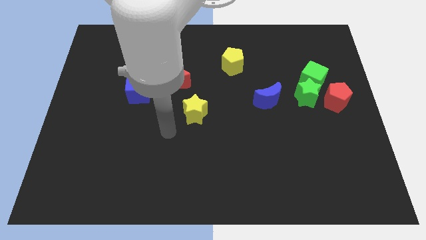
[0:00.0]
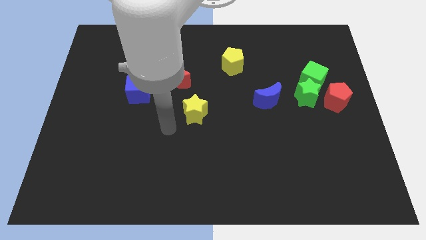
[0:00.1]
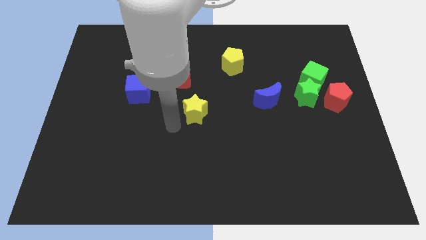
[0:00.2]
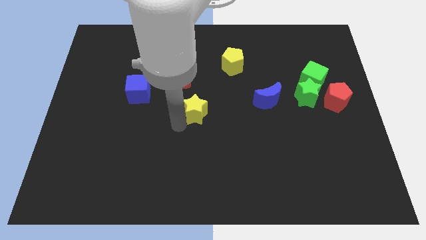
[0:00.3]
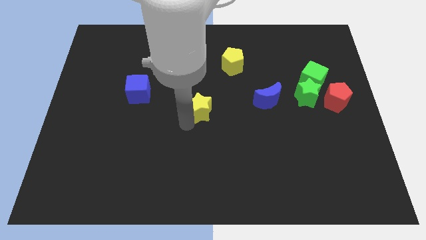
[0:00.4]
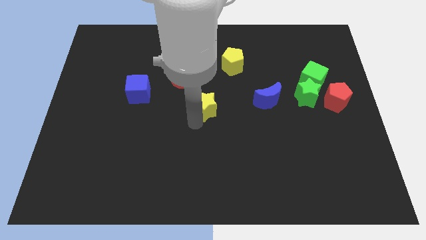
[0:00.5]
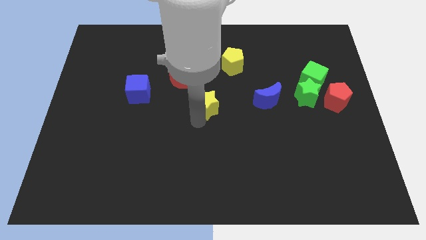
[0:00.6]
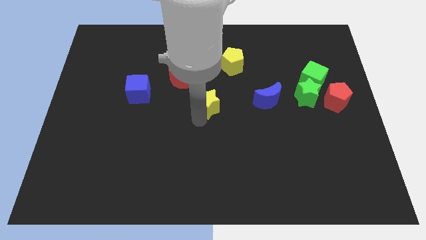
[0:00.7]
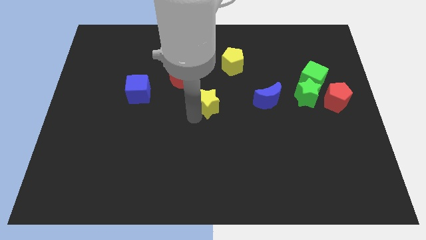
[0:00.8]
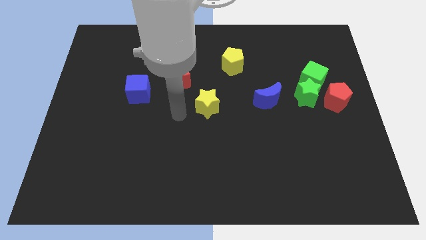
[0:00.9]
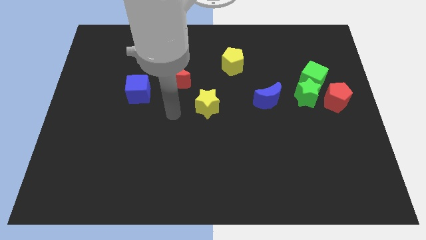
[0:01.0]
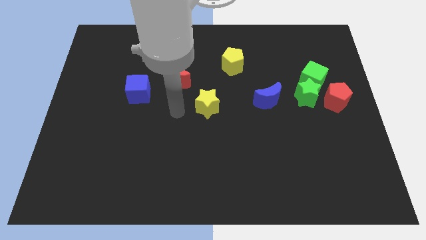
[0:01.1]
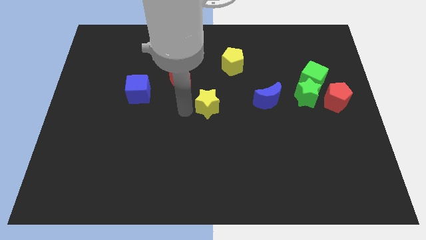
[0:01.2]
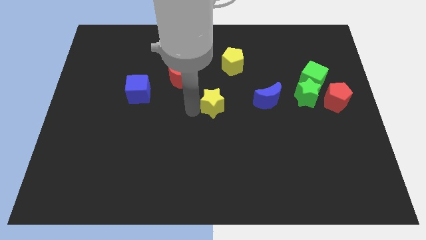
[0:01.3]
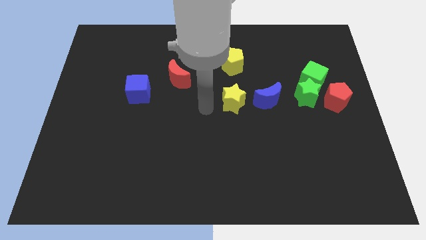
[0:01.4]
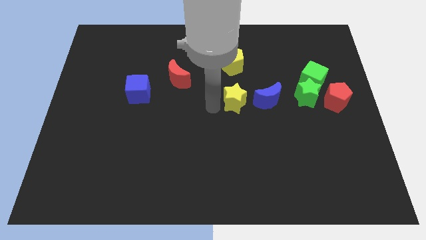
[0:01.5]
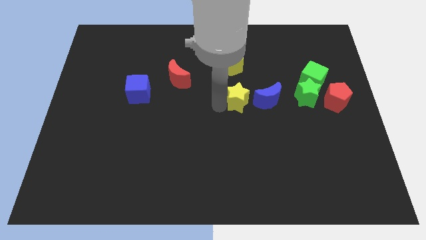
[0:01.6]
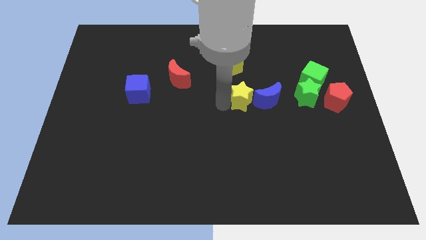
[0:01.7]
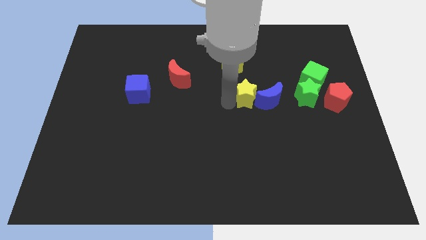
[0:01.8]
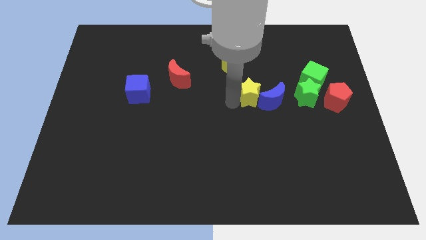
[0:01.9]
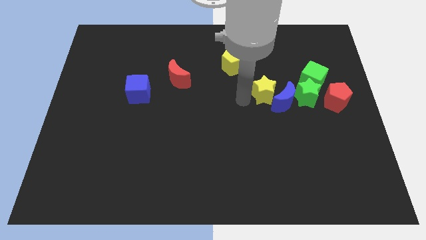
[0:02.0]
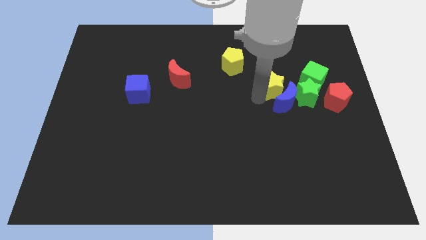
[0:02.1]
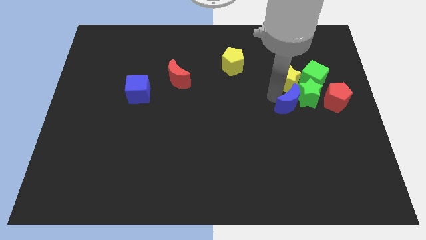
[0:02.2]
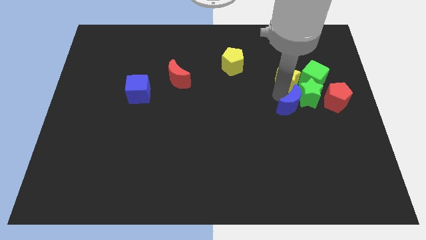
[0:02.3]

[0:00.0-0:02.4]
push blue crescent and yellow star towards the green blocks

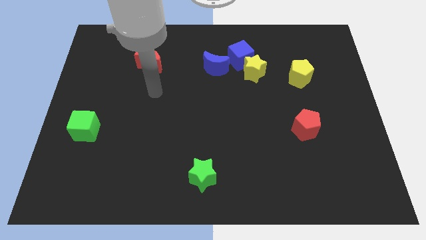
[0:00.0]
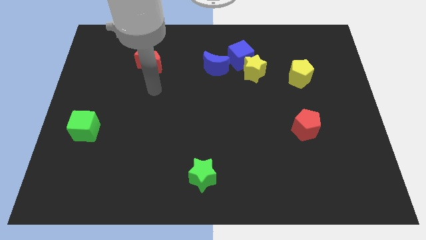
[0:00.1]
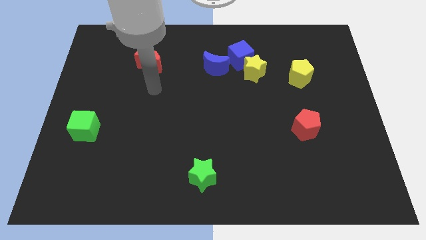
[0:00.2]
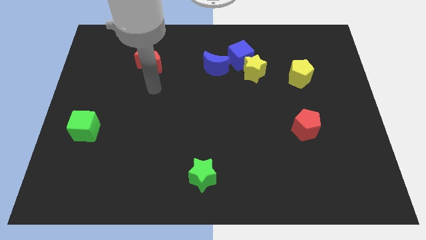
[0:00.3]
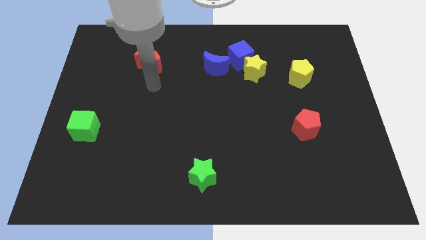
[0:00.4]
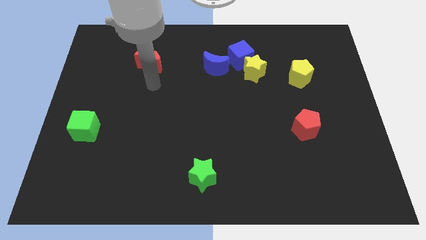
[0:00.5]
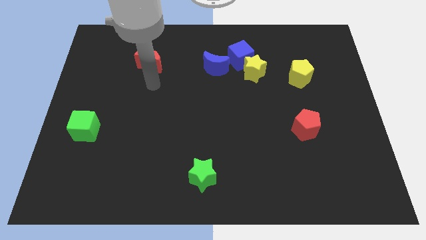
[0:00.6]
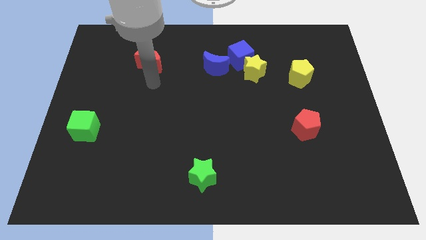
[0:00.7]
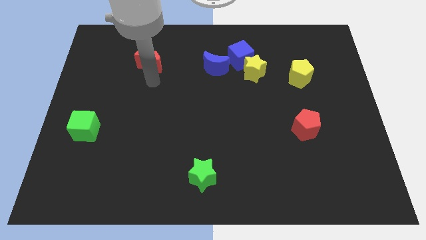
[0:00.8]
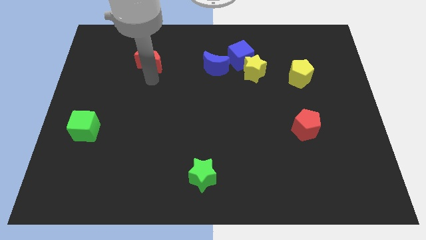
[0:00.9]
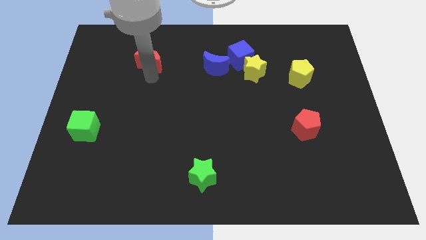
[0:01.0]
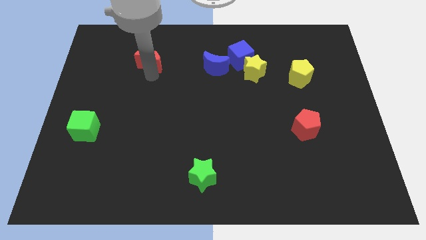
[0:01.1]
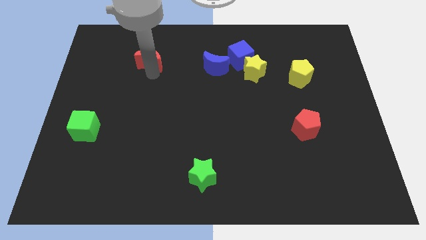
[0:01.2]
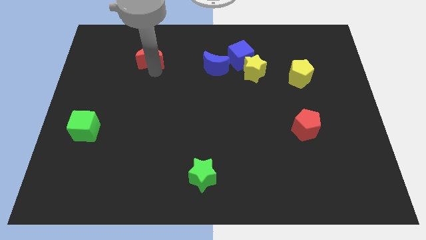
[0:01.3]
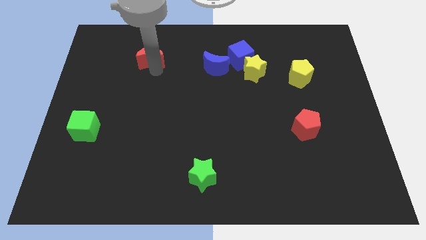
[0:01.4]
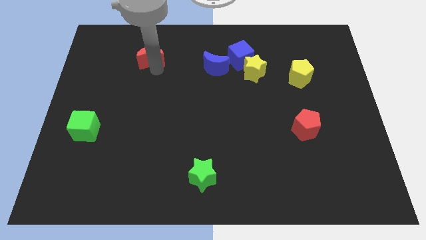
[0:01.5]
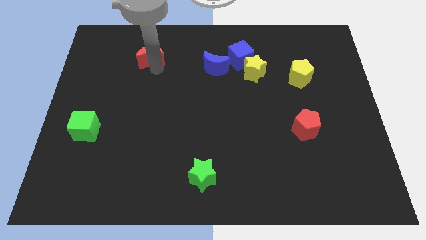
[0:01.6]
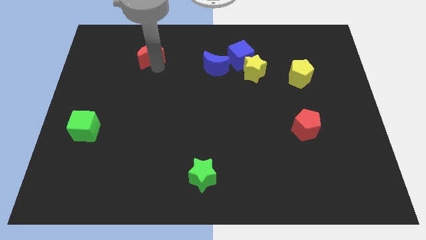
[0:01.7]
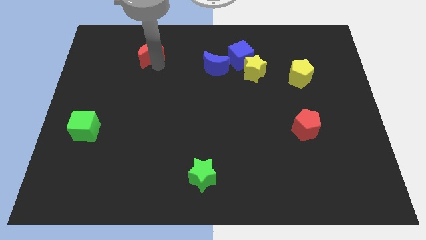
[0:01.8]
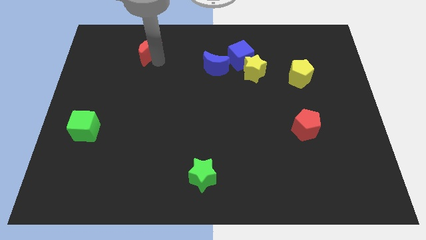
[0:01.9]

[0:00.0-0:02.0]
push the red moon slightly towards upward

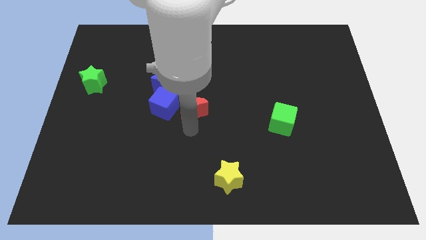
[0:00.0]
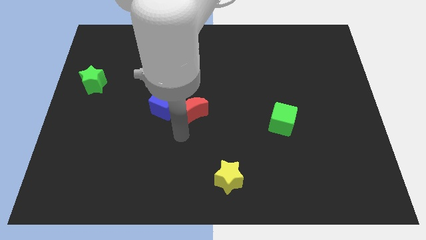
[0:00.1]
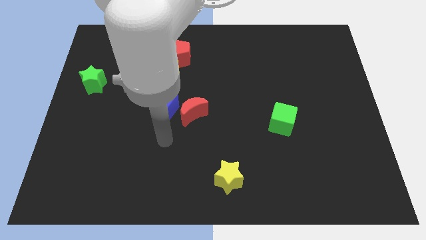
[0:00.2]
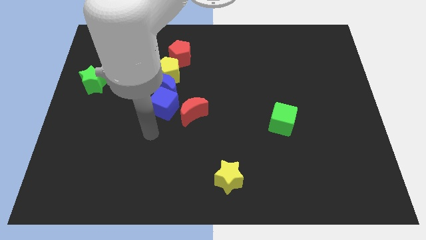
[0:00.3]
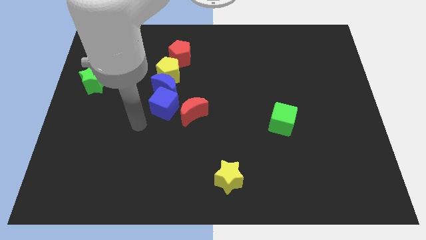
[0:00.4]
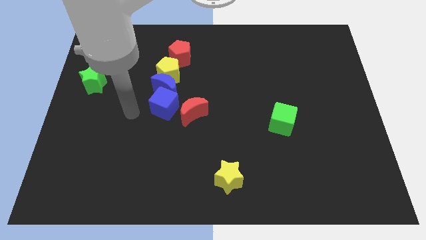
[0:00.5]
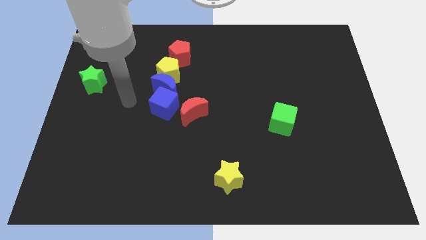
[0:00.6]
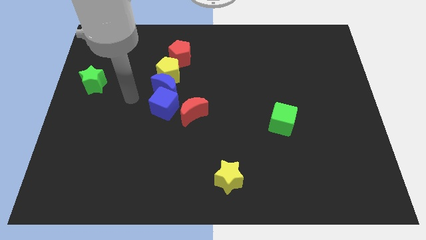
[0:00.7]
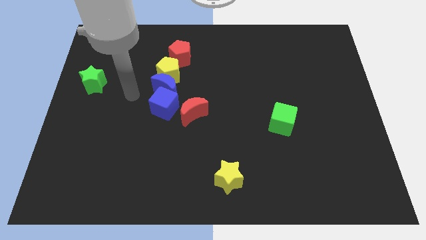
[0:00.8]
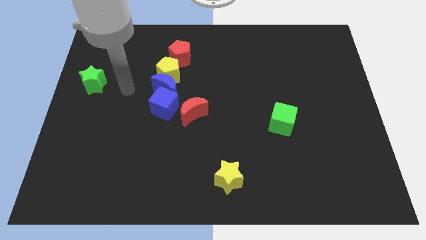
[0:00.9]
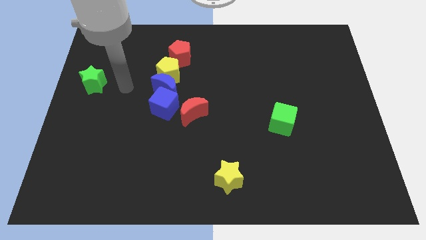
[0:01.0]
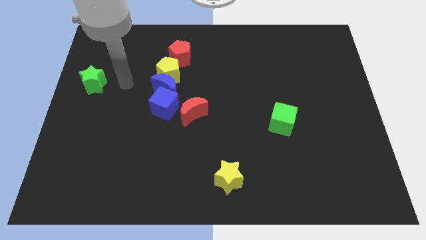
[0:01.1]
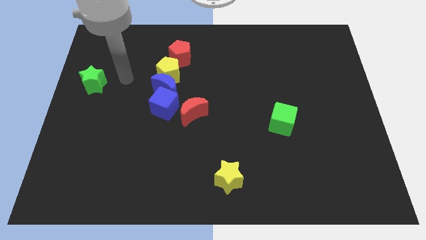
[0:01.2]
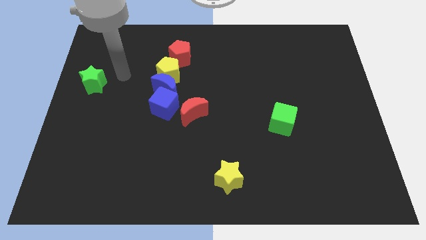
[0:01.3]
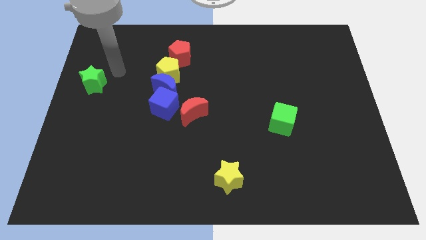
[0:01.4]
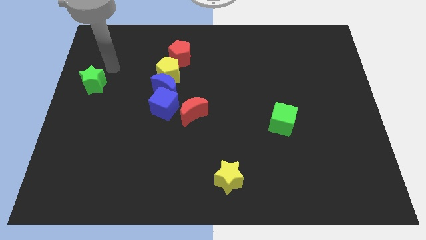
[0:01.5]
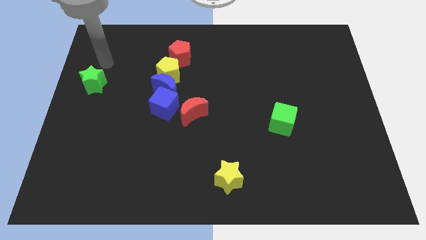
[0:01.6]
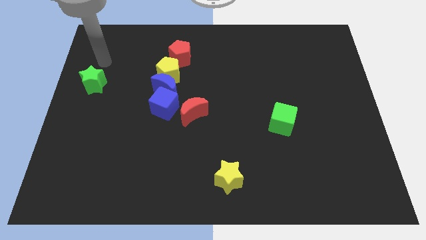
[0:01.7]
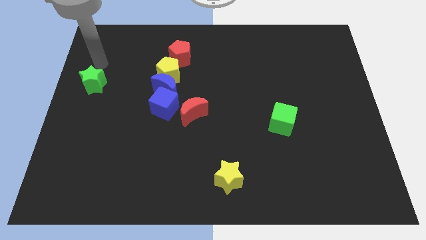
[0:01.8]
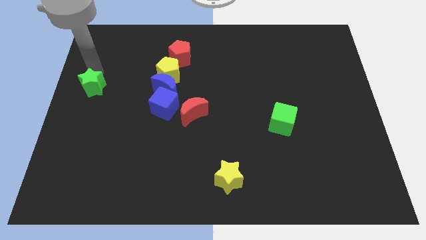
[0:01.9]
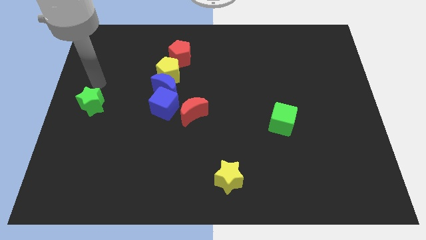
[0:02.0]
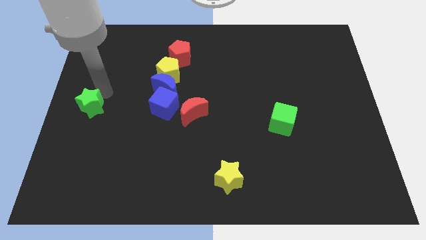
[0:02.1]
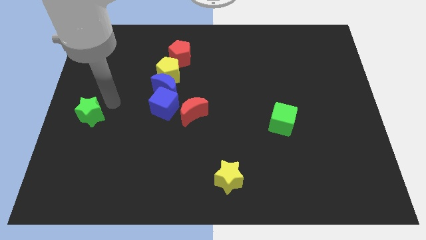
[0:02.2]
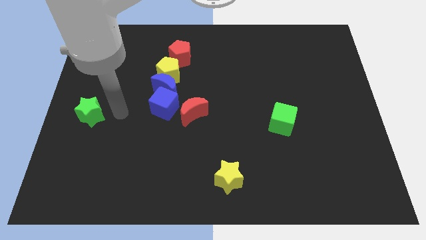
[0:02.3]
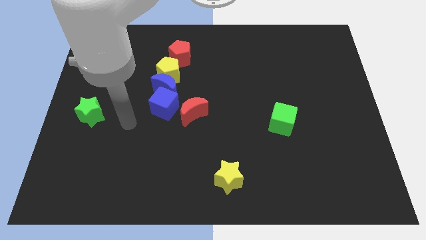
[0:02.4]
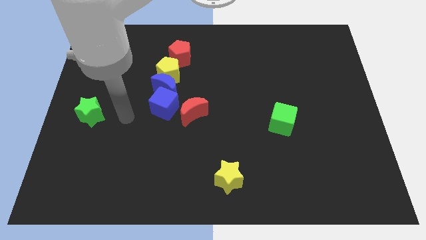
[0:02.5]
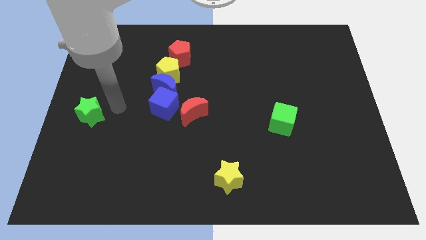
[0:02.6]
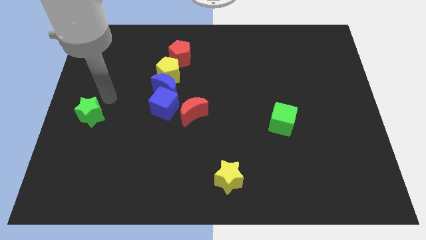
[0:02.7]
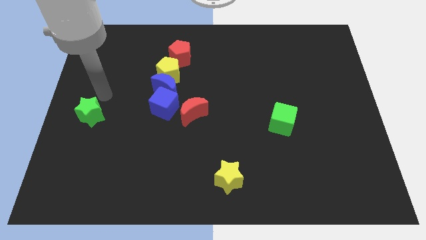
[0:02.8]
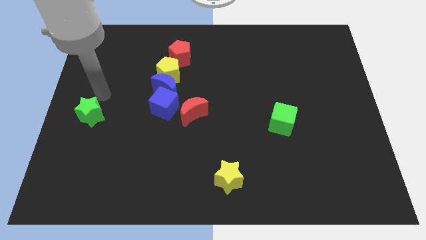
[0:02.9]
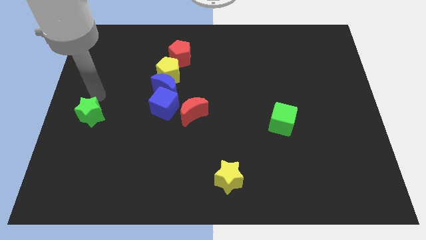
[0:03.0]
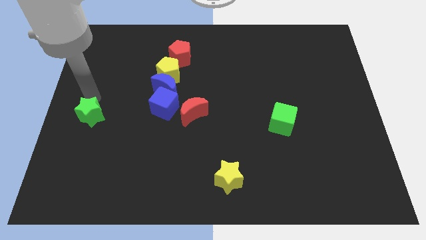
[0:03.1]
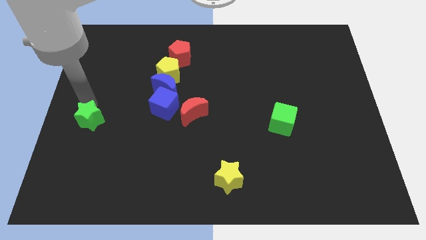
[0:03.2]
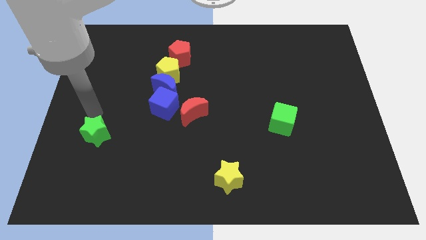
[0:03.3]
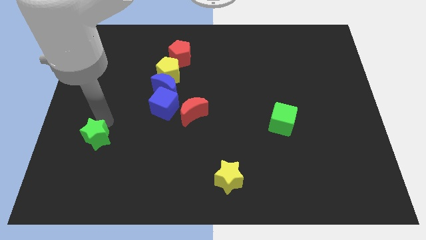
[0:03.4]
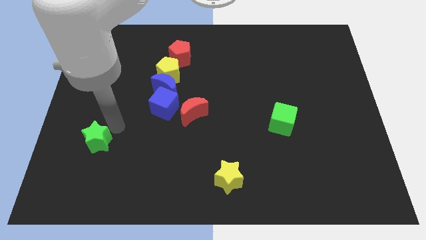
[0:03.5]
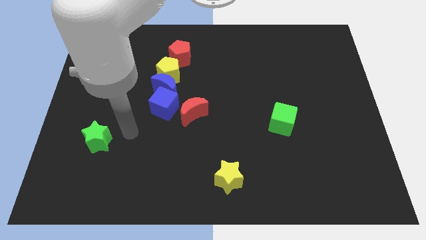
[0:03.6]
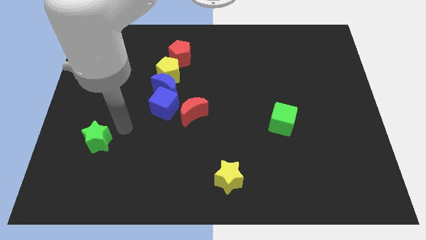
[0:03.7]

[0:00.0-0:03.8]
push the green star downwards

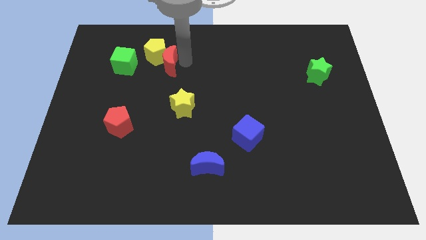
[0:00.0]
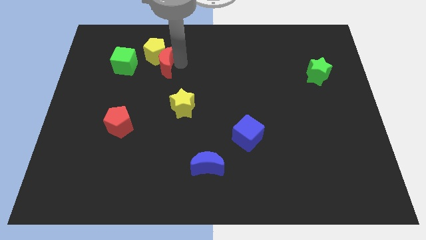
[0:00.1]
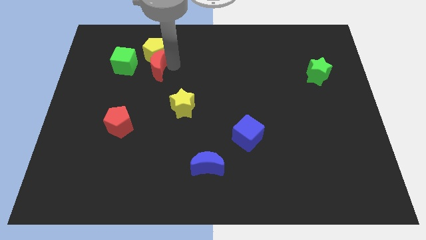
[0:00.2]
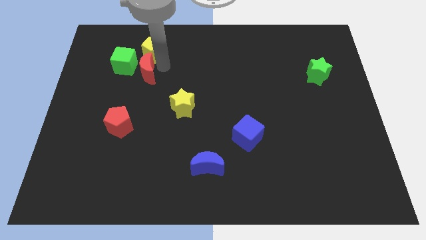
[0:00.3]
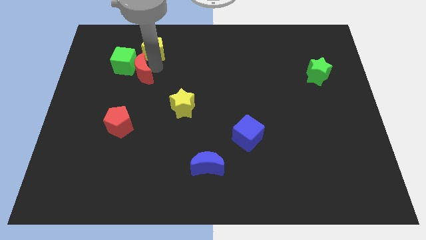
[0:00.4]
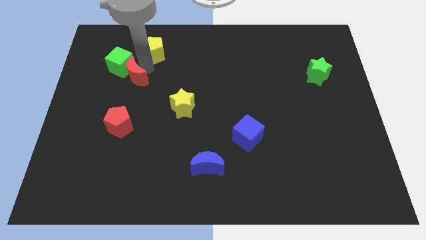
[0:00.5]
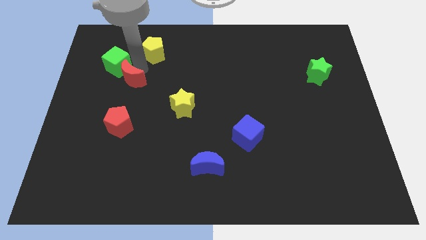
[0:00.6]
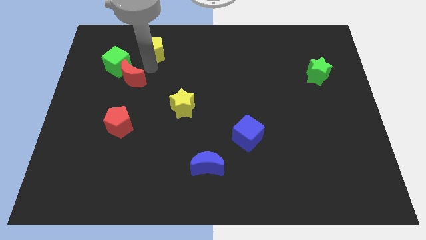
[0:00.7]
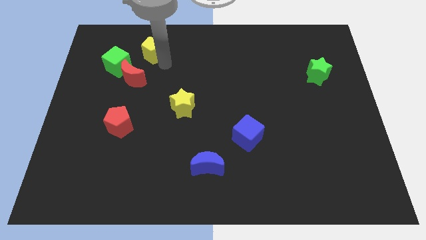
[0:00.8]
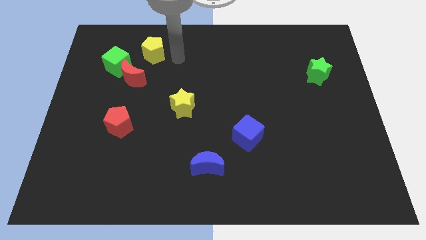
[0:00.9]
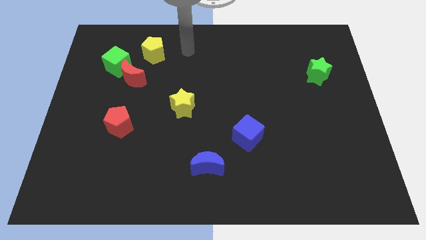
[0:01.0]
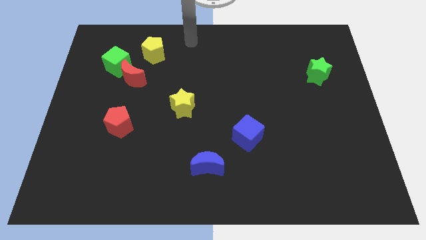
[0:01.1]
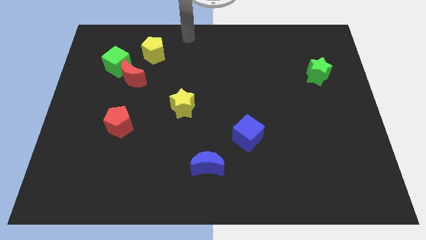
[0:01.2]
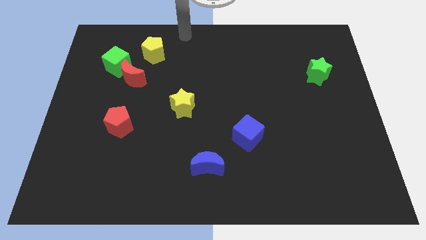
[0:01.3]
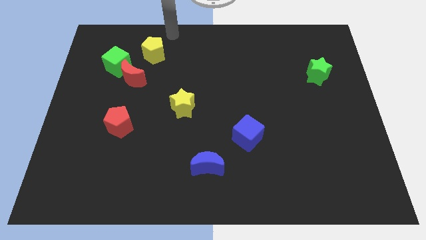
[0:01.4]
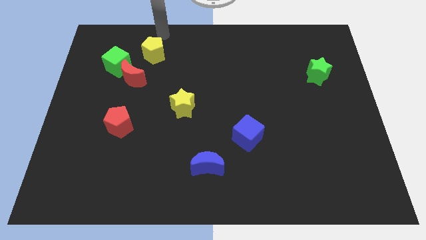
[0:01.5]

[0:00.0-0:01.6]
push the red crescent close to the green cube
